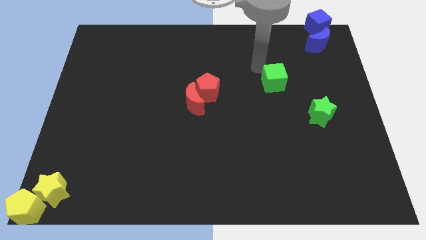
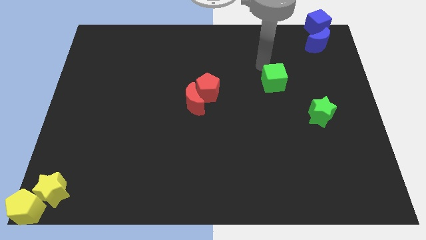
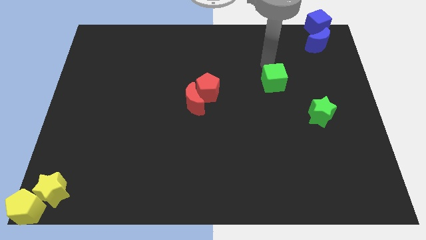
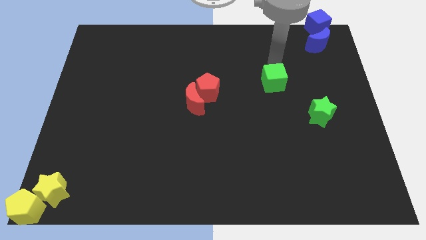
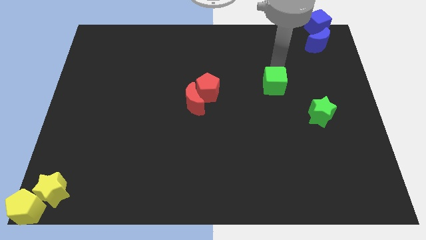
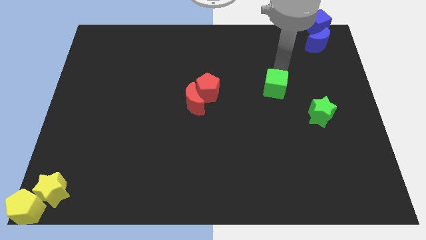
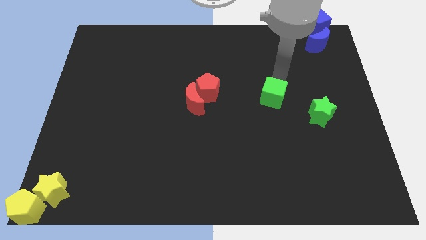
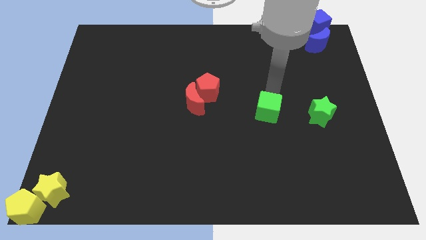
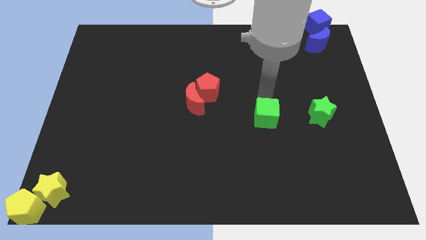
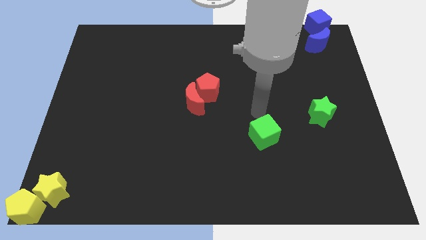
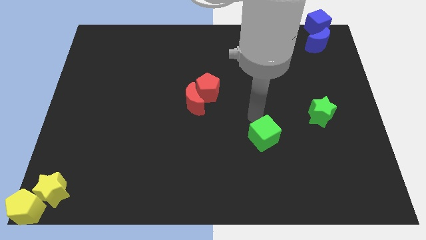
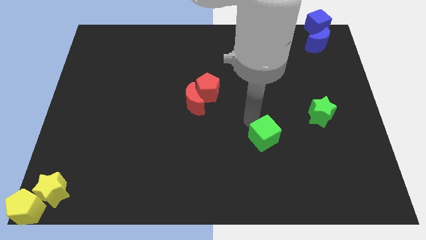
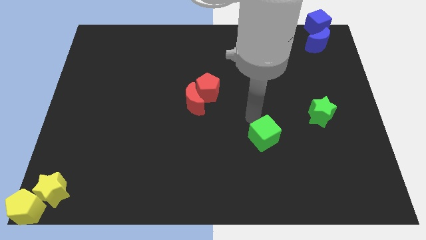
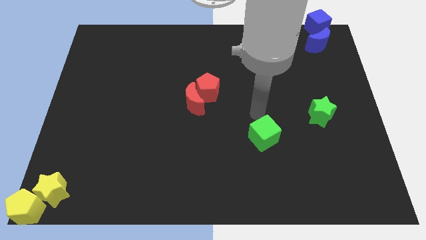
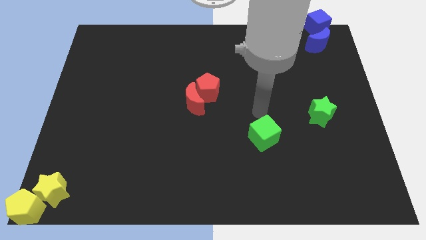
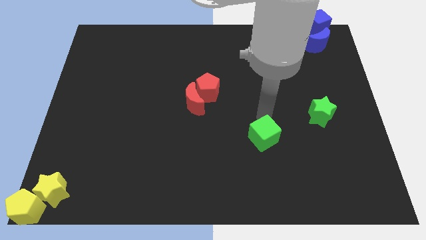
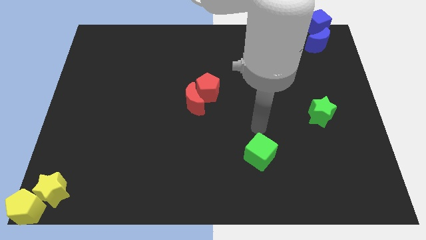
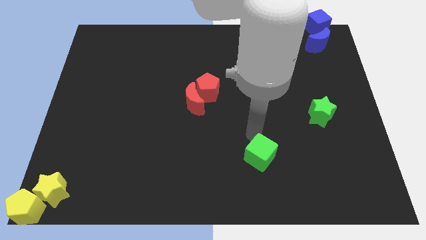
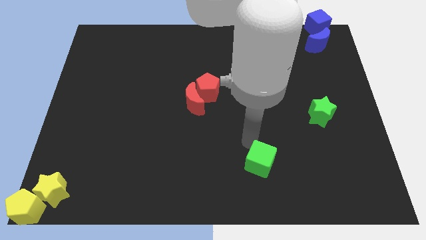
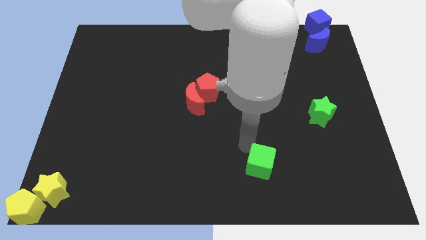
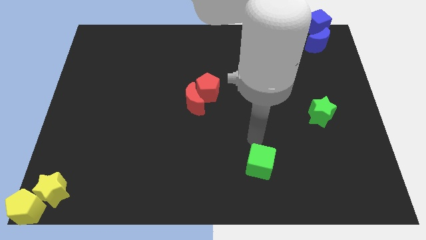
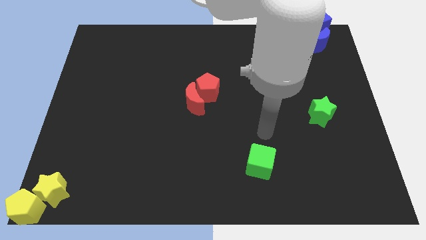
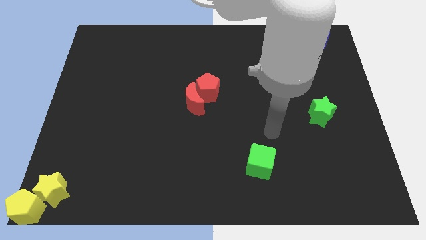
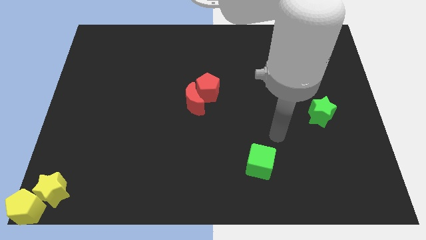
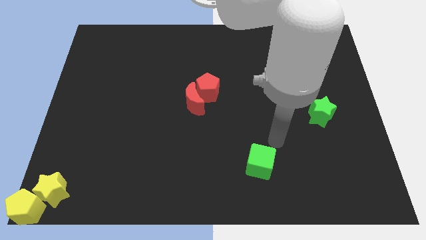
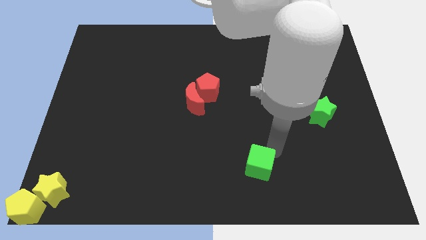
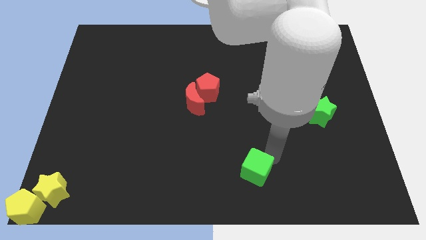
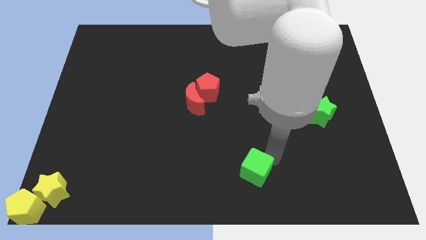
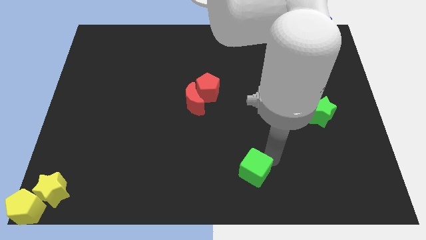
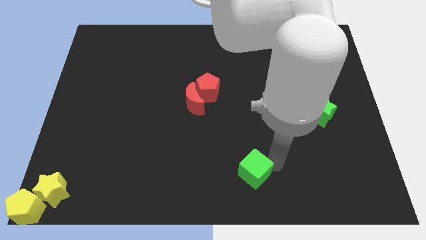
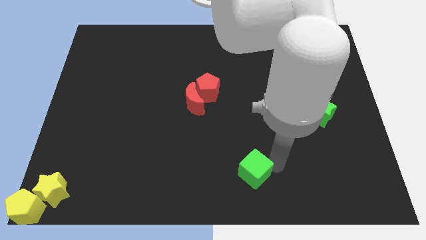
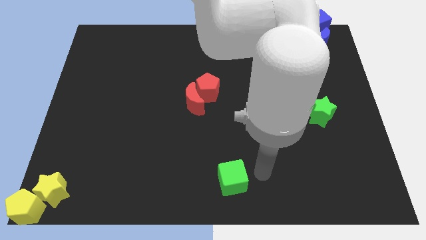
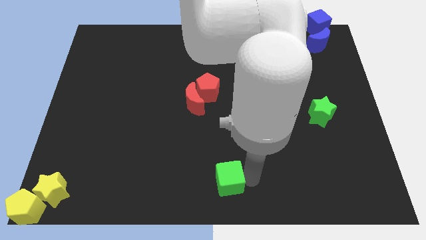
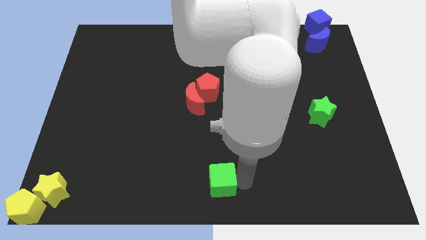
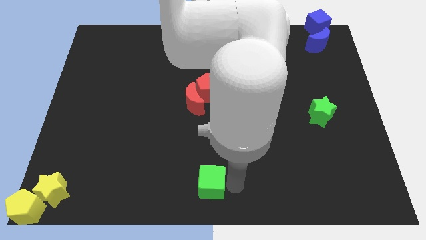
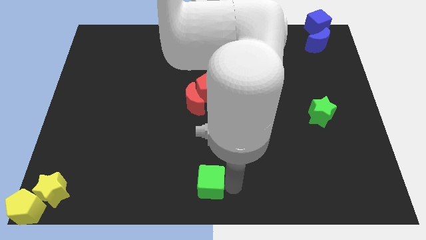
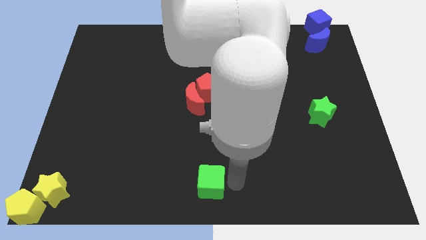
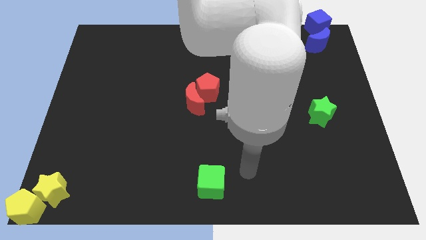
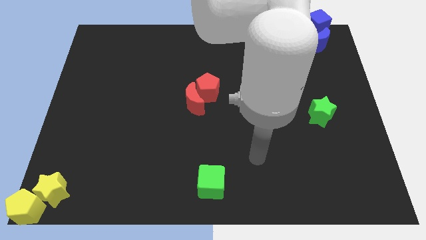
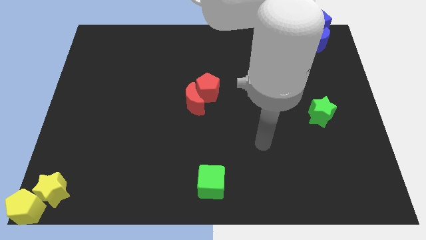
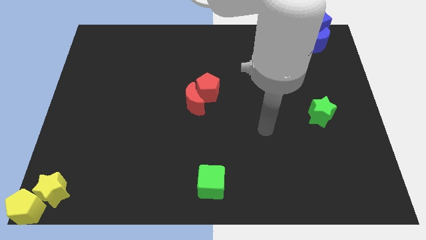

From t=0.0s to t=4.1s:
slide green cube towards bottom center

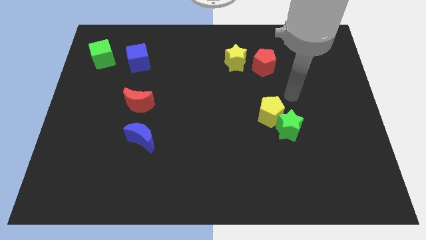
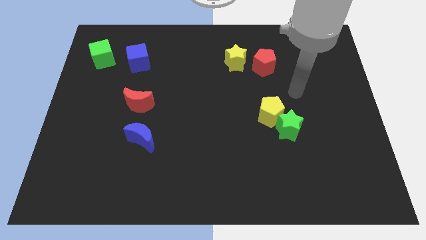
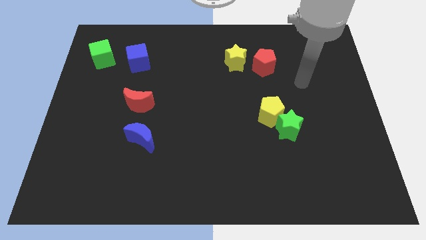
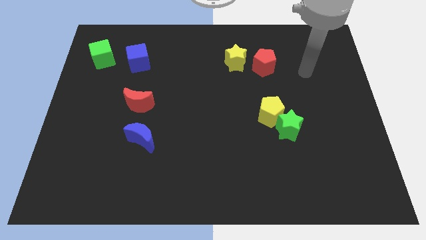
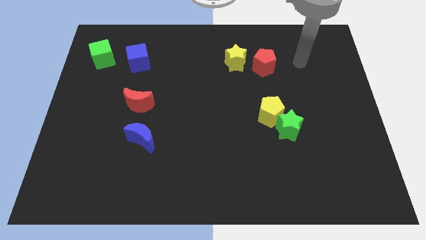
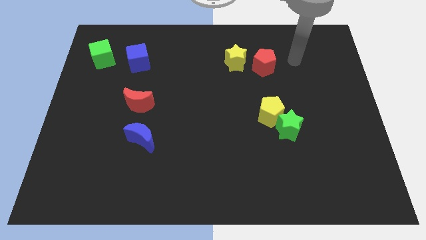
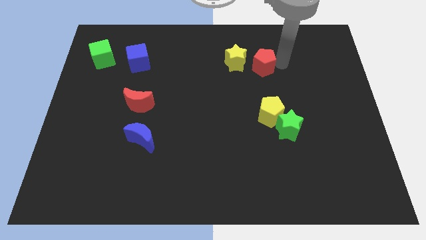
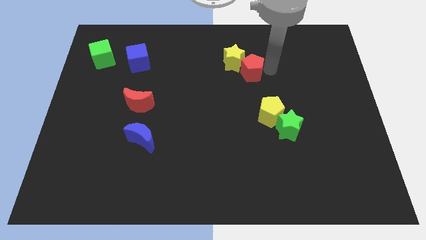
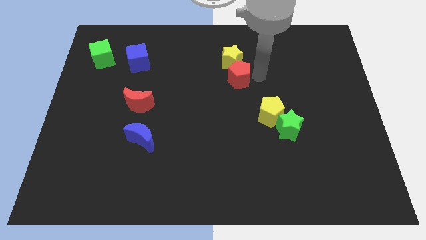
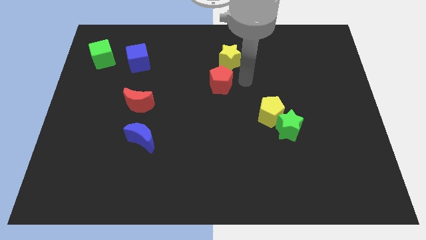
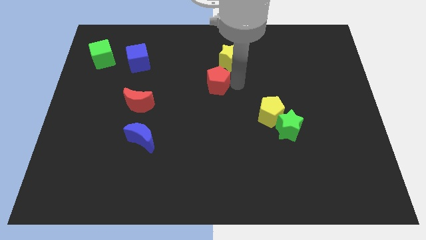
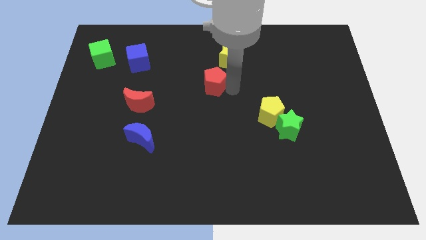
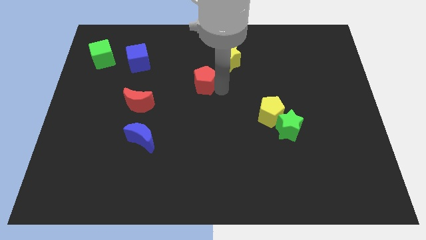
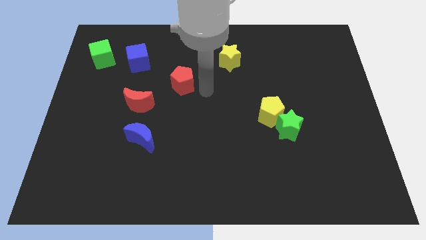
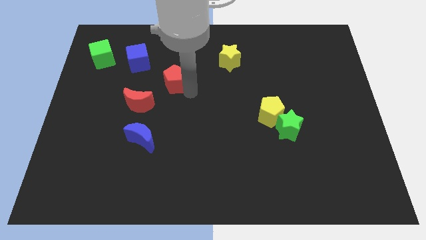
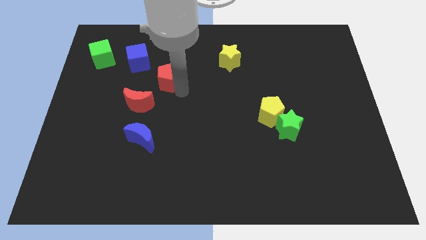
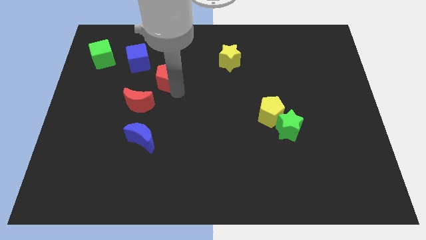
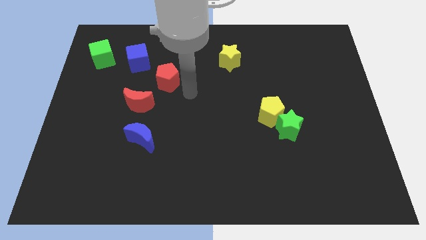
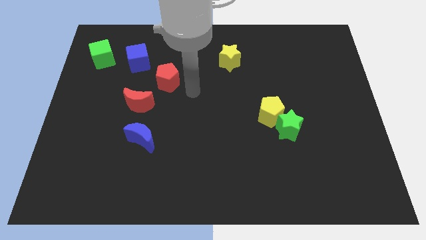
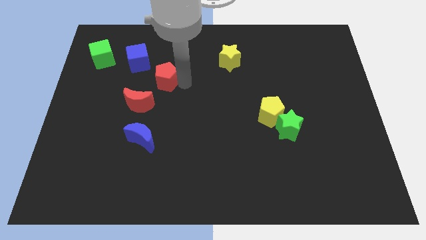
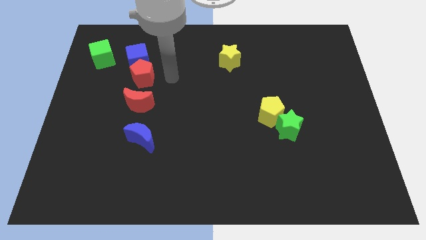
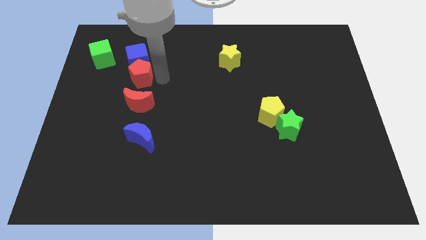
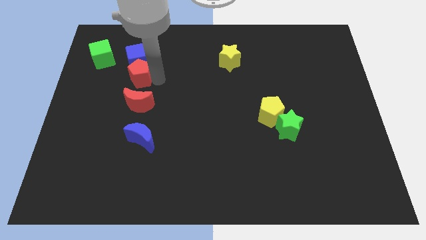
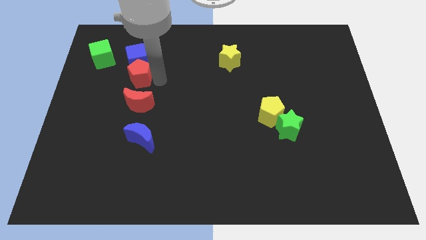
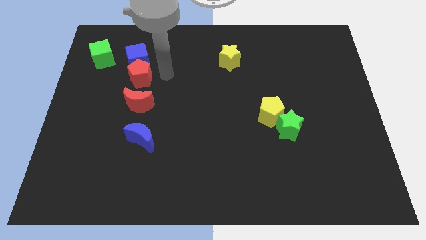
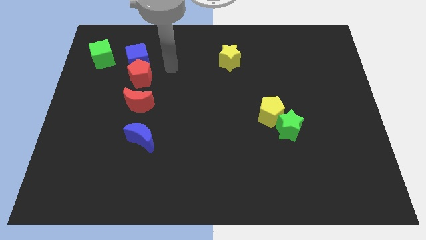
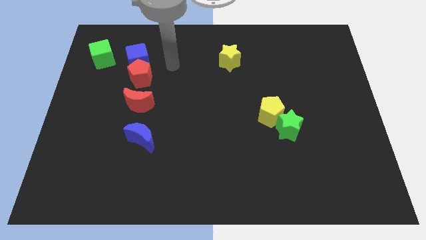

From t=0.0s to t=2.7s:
place red pentagon below the blue cube

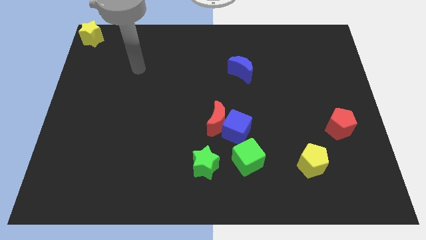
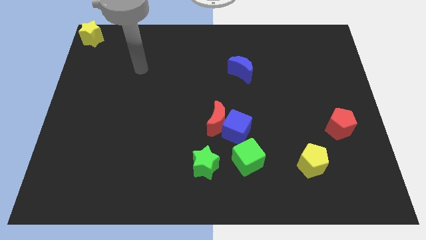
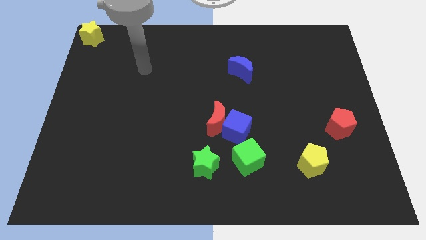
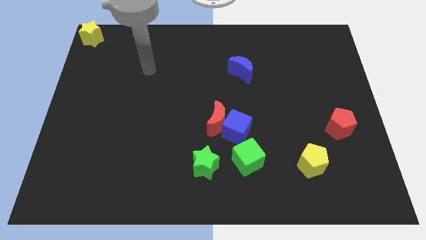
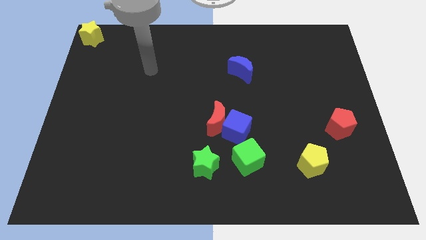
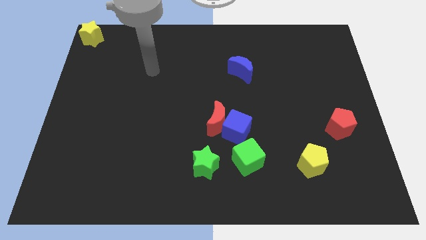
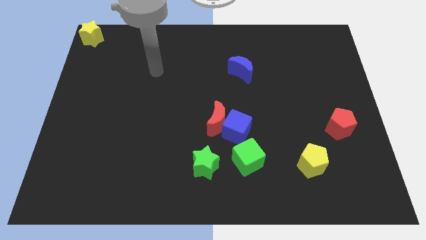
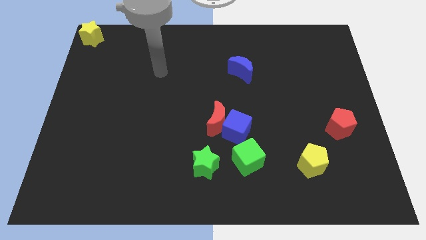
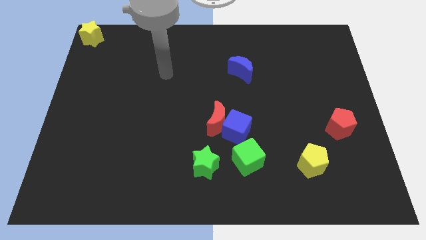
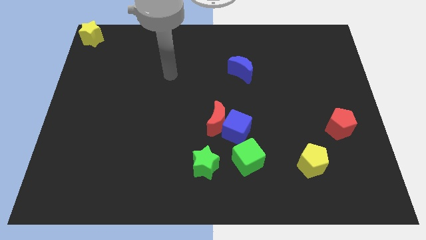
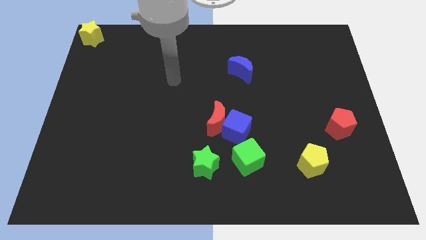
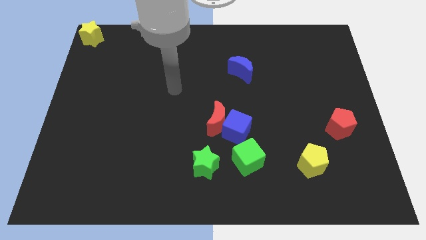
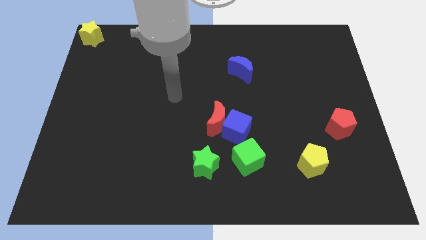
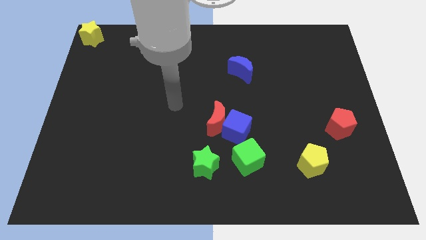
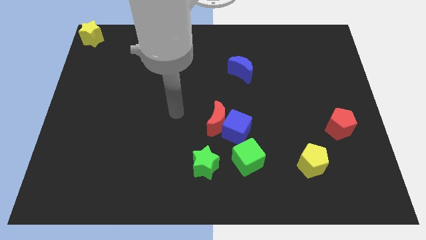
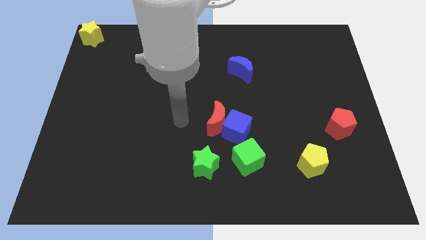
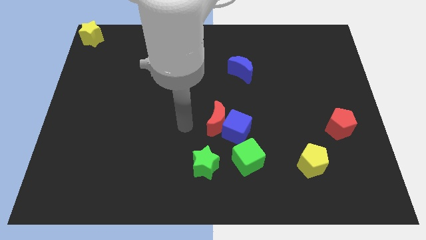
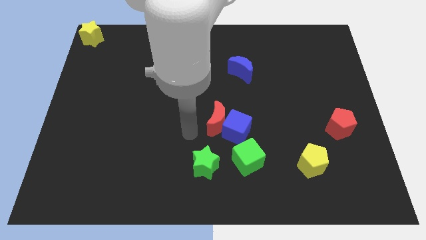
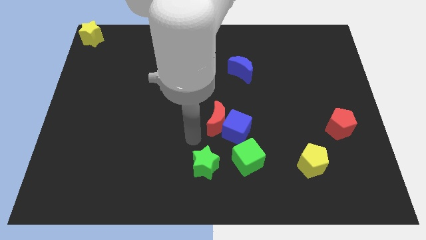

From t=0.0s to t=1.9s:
move your arm towards the left of the red crescent

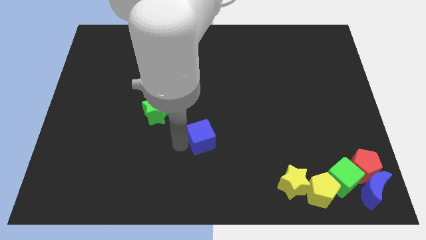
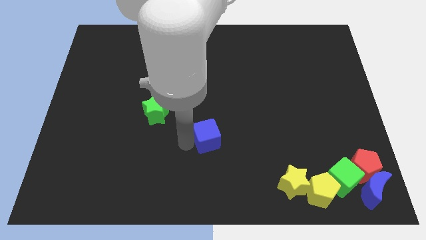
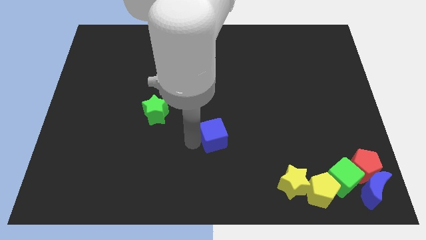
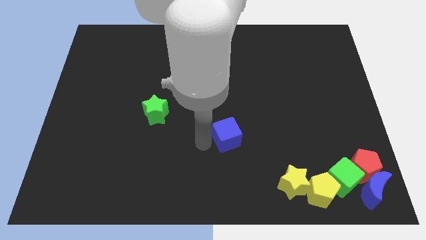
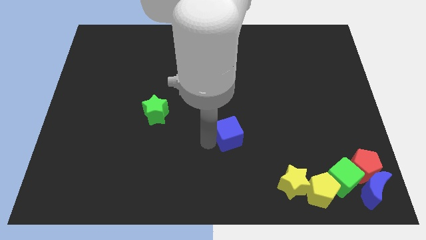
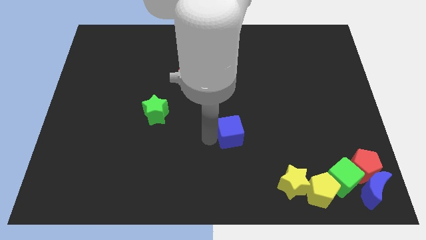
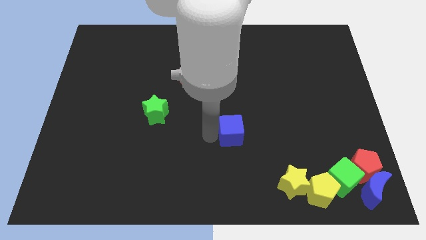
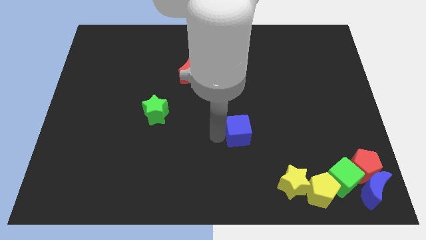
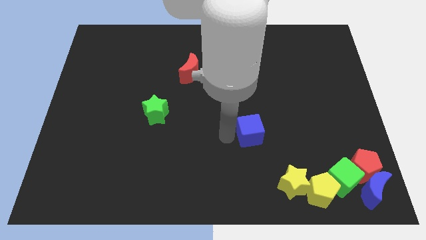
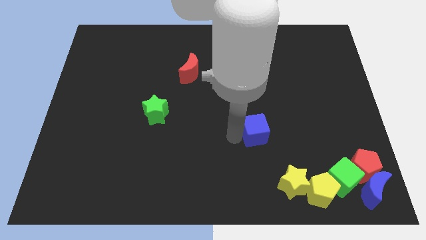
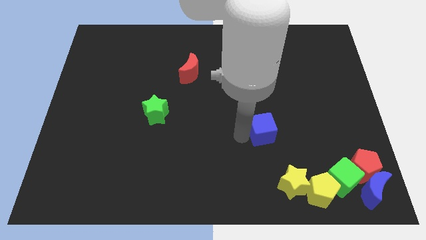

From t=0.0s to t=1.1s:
slightly move blue cube towards right
